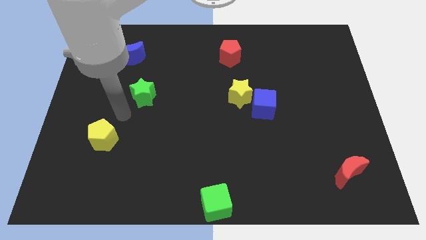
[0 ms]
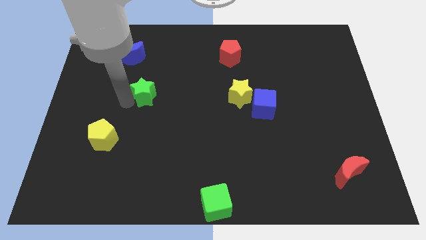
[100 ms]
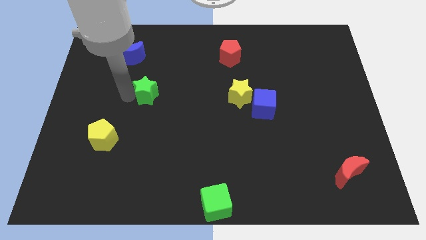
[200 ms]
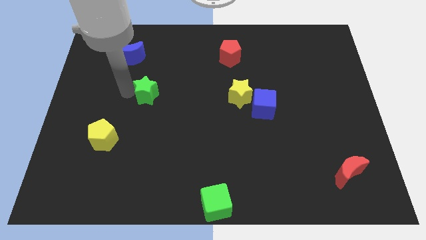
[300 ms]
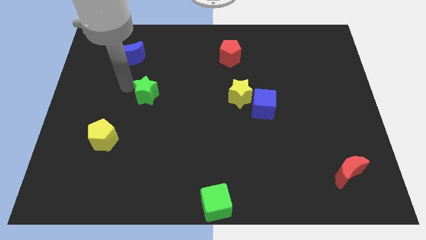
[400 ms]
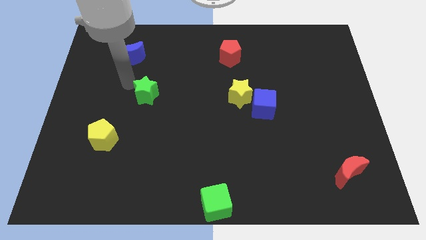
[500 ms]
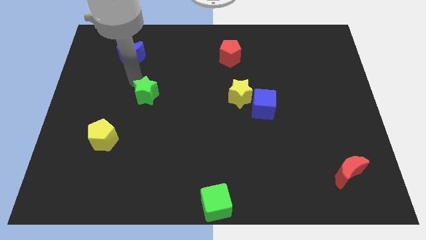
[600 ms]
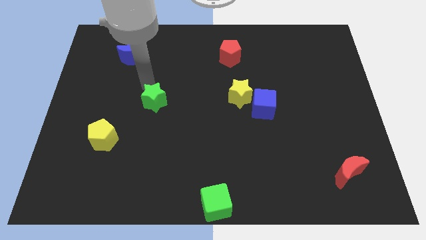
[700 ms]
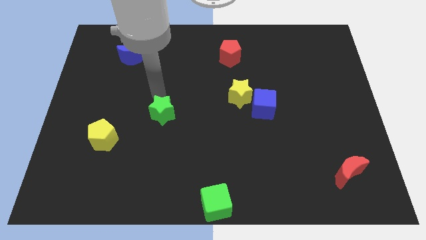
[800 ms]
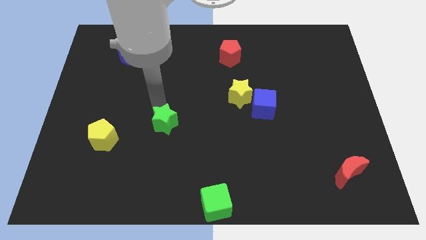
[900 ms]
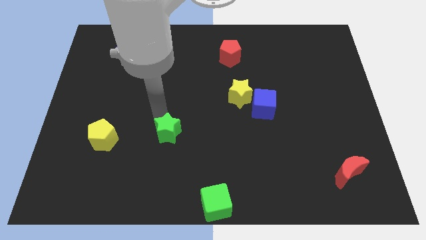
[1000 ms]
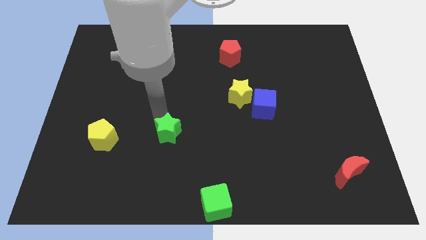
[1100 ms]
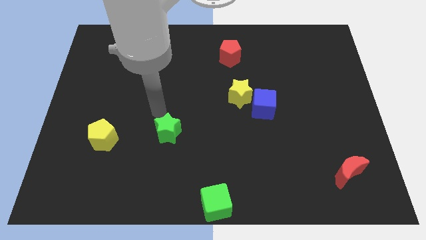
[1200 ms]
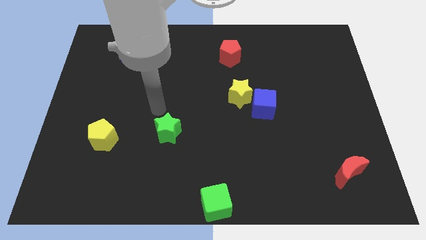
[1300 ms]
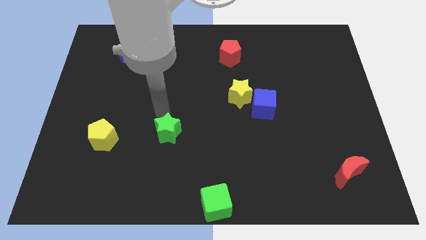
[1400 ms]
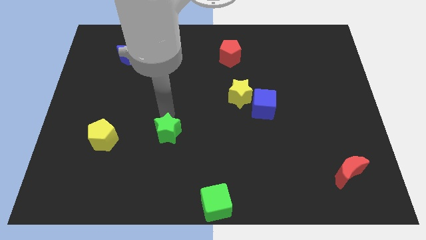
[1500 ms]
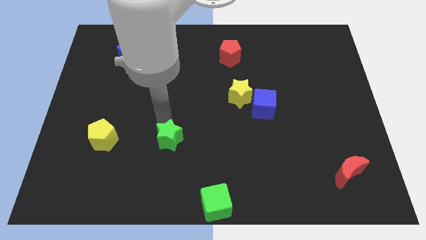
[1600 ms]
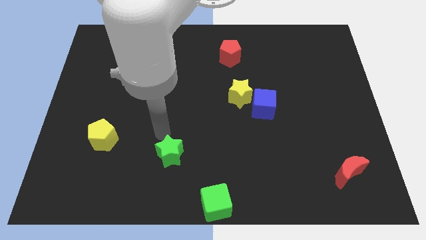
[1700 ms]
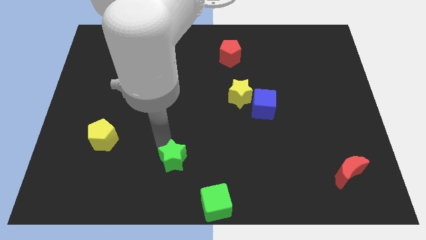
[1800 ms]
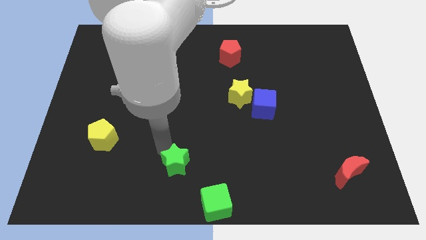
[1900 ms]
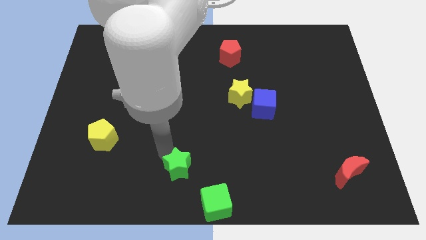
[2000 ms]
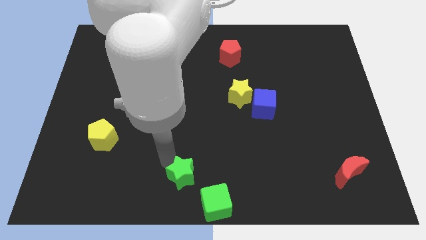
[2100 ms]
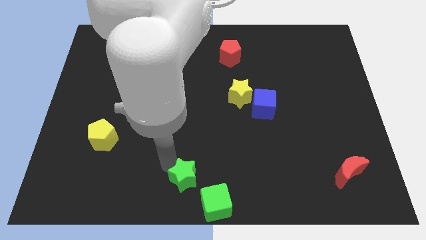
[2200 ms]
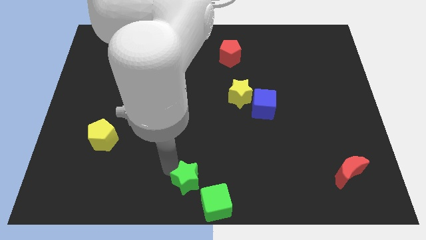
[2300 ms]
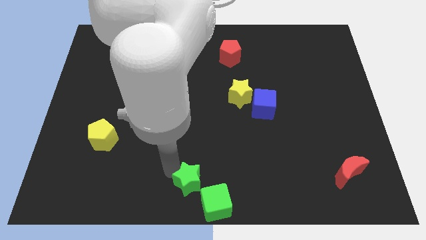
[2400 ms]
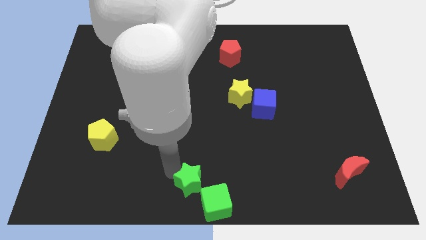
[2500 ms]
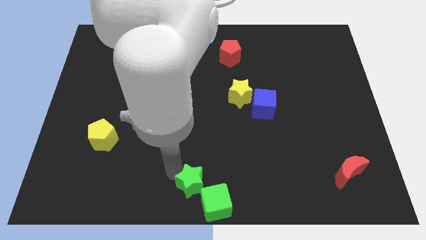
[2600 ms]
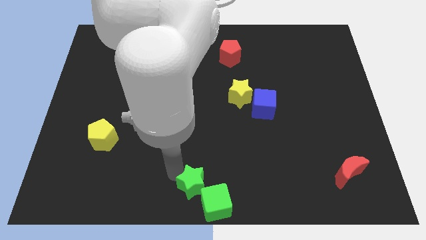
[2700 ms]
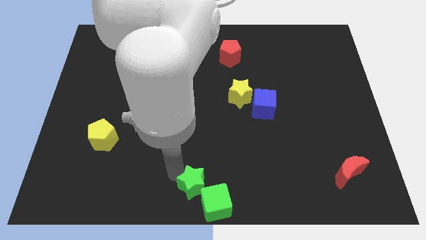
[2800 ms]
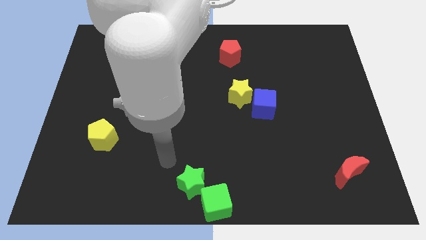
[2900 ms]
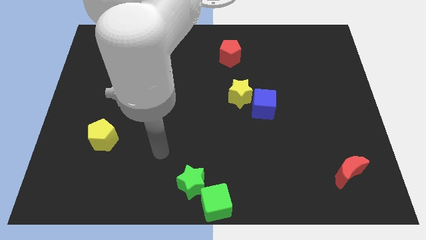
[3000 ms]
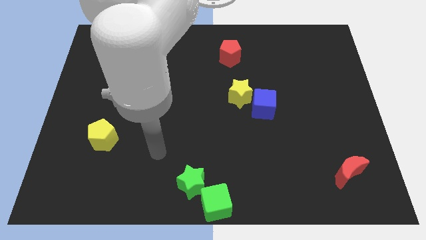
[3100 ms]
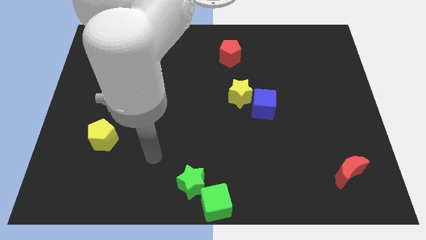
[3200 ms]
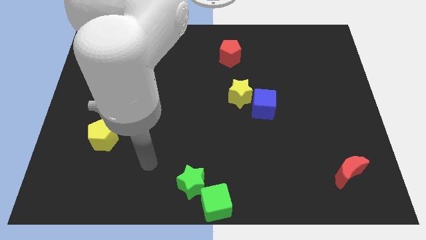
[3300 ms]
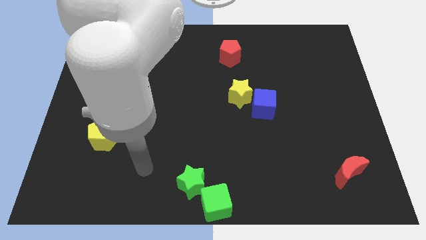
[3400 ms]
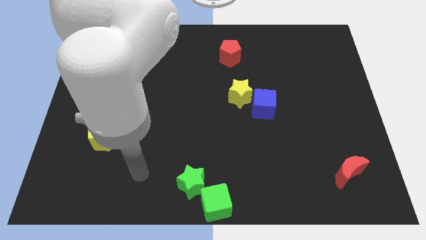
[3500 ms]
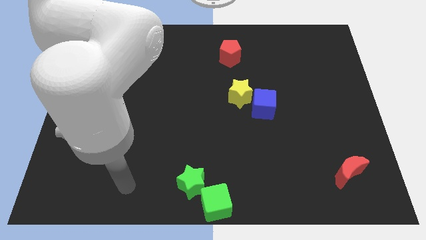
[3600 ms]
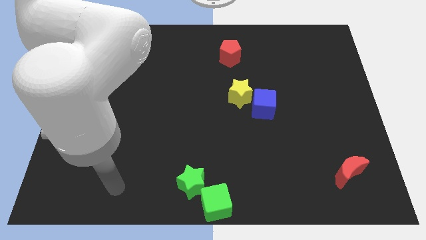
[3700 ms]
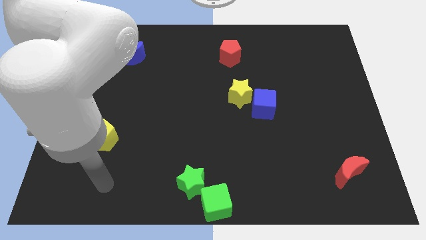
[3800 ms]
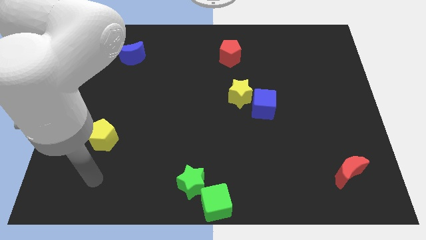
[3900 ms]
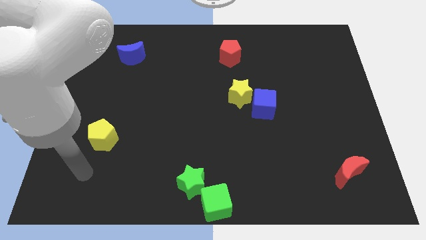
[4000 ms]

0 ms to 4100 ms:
move the green star to the top left side of the green cube

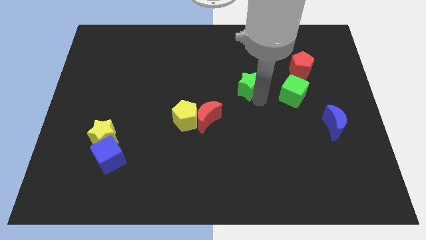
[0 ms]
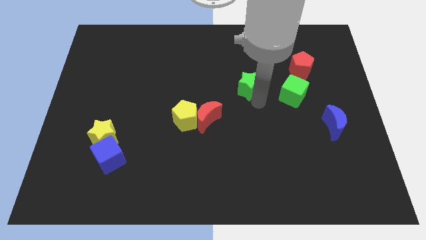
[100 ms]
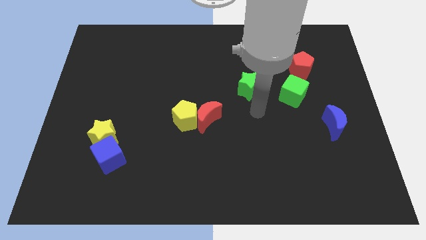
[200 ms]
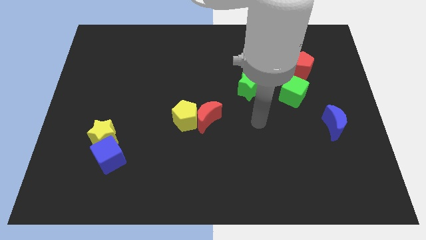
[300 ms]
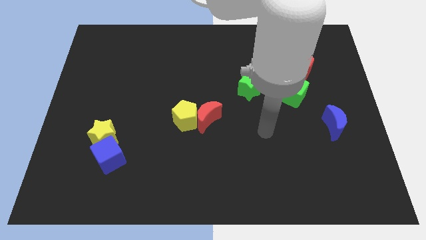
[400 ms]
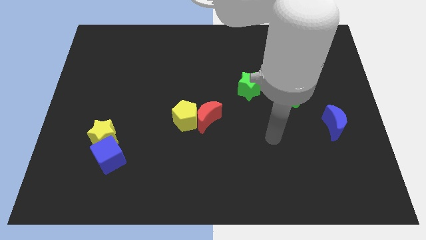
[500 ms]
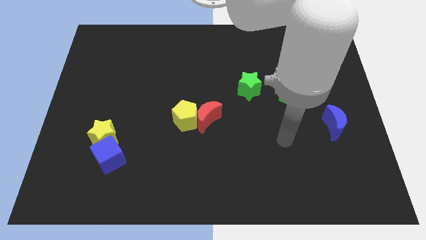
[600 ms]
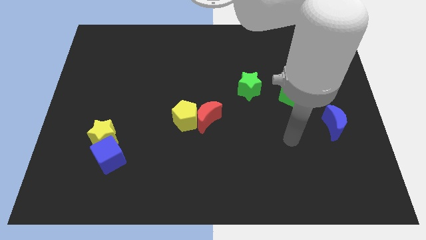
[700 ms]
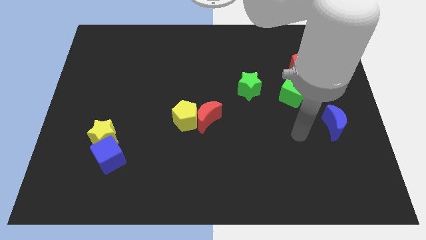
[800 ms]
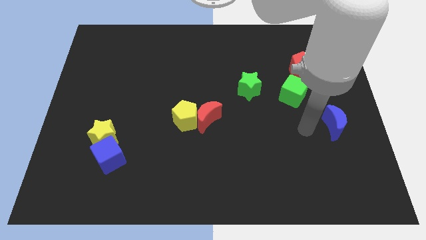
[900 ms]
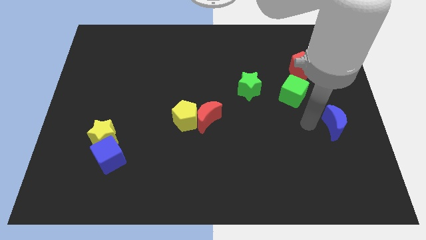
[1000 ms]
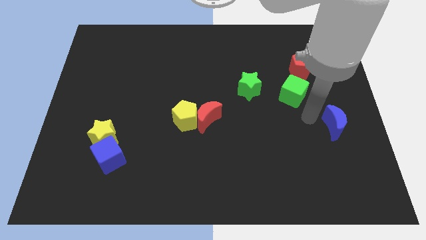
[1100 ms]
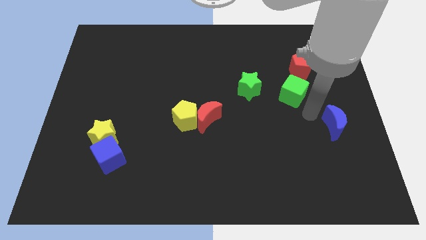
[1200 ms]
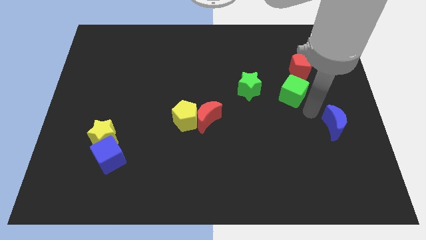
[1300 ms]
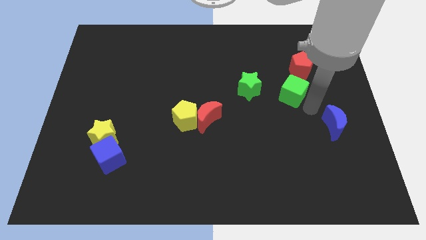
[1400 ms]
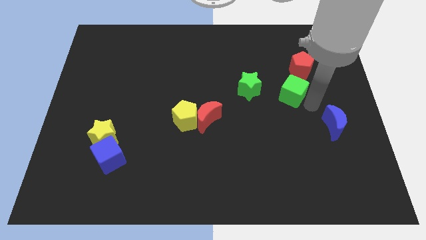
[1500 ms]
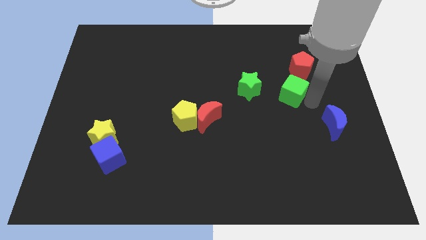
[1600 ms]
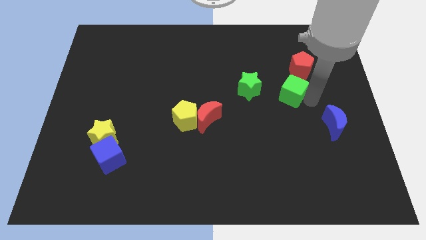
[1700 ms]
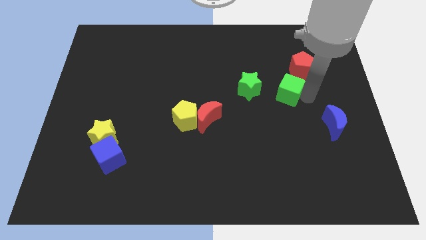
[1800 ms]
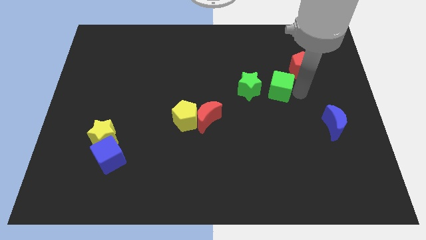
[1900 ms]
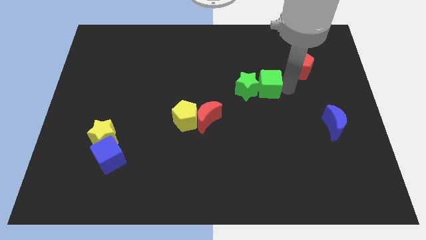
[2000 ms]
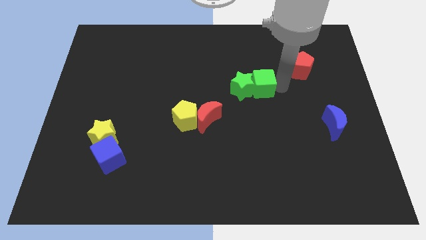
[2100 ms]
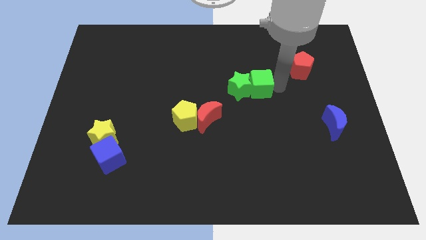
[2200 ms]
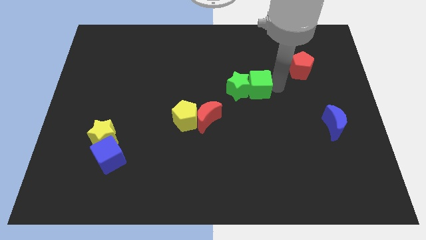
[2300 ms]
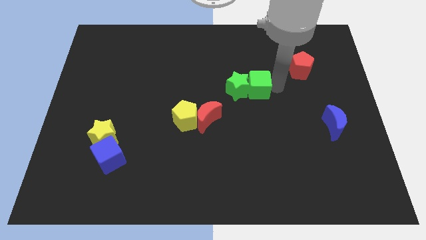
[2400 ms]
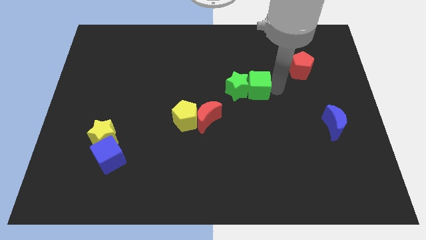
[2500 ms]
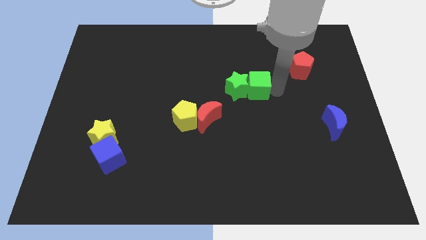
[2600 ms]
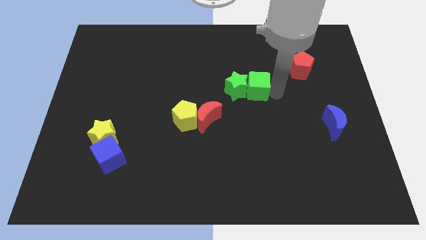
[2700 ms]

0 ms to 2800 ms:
move the green star and green cube towards center of the board

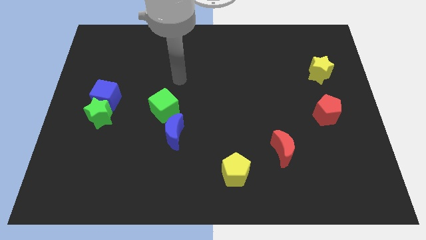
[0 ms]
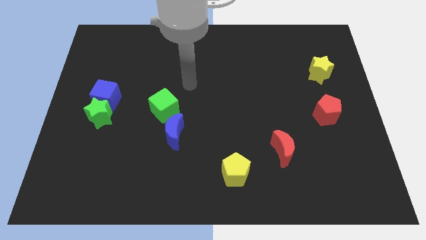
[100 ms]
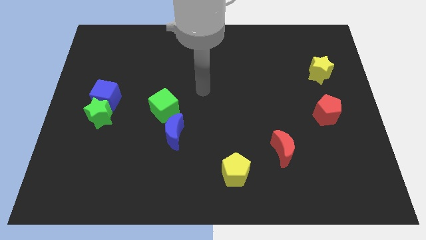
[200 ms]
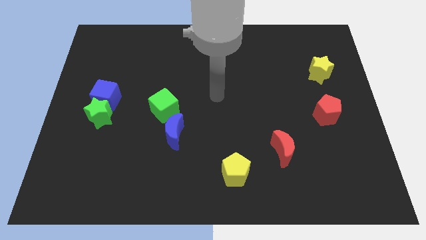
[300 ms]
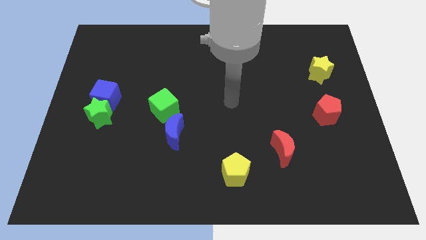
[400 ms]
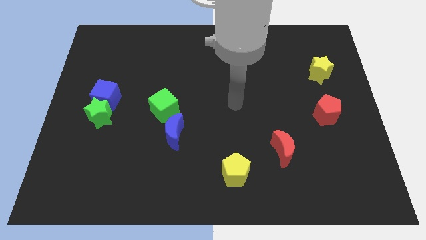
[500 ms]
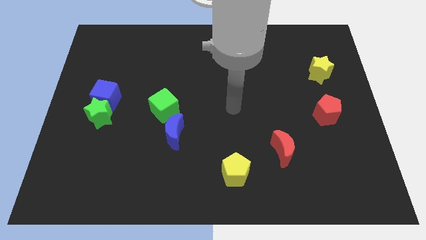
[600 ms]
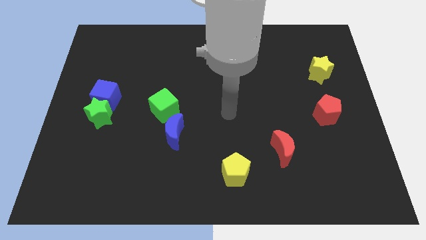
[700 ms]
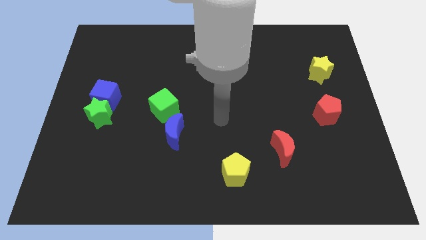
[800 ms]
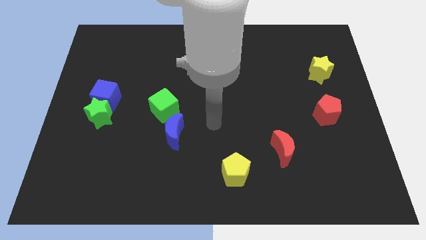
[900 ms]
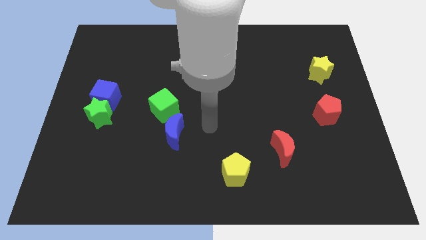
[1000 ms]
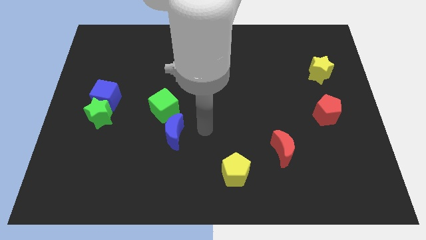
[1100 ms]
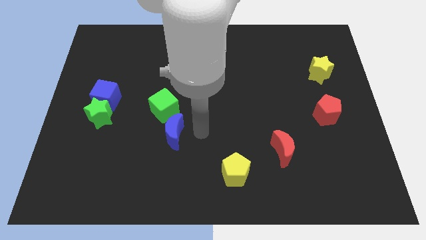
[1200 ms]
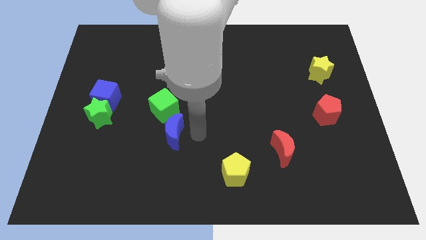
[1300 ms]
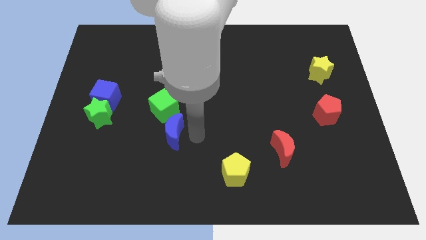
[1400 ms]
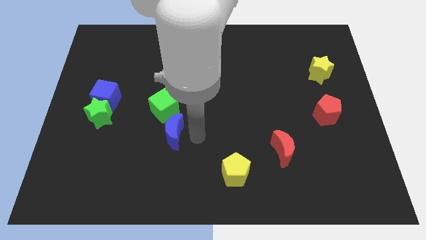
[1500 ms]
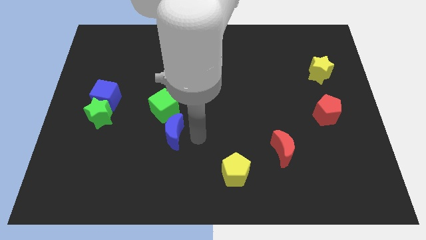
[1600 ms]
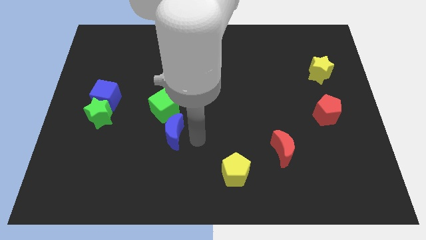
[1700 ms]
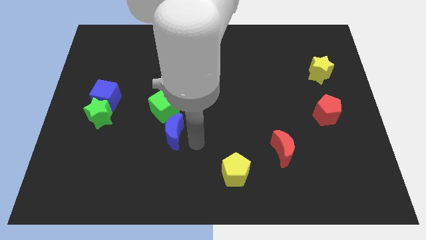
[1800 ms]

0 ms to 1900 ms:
move your arm towards the blue crescent

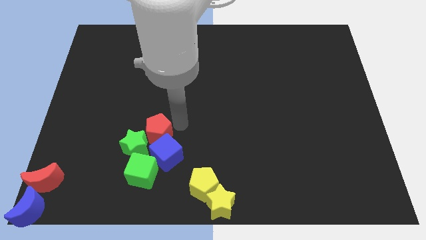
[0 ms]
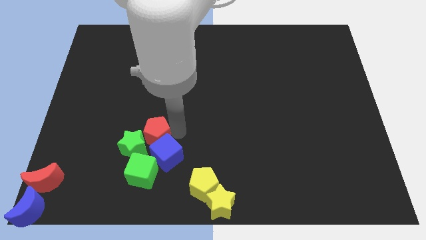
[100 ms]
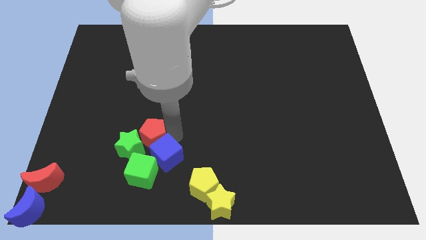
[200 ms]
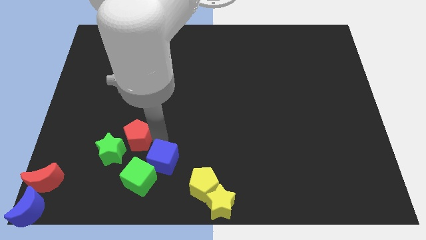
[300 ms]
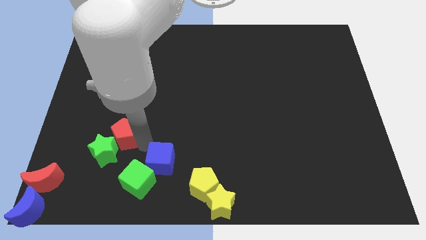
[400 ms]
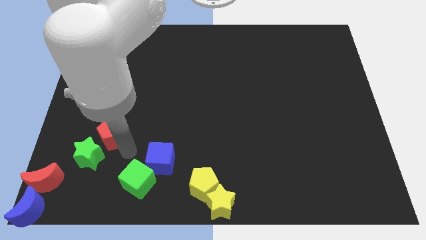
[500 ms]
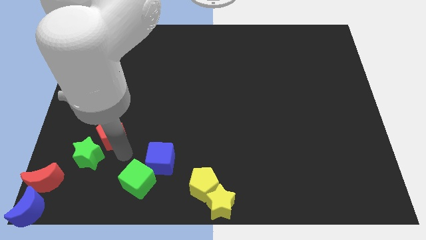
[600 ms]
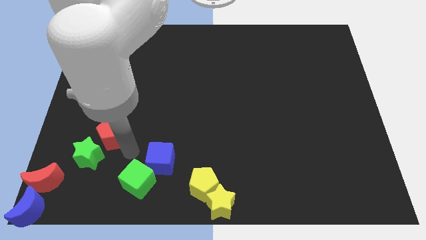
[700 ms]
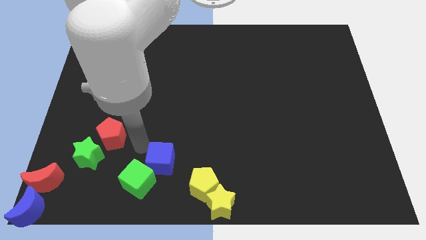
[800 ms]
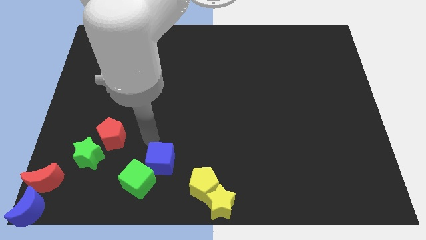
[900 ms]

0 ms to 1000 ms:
separate the red pentagon and blue cube
